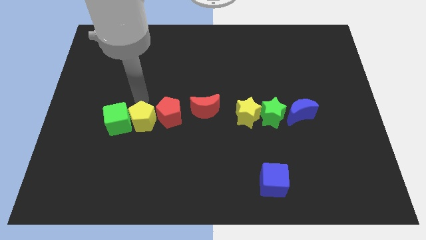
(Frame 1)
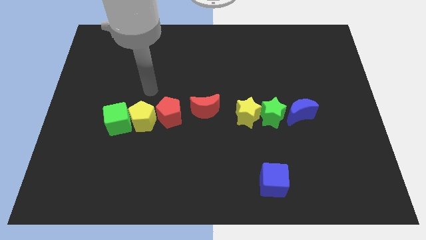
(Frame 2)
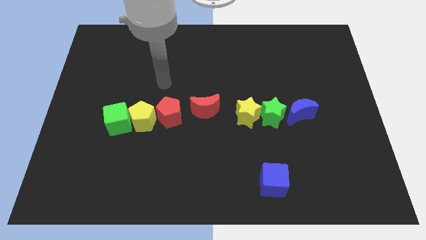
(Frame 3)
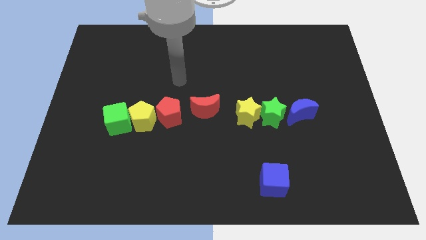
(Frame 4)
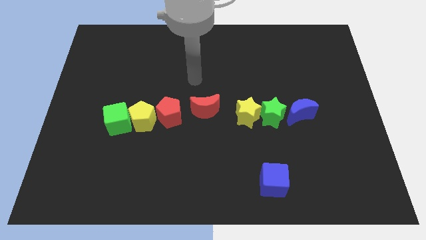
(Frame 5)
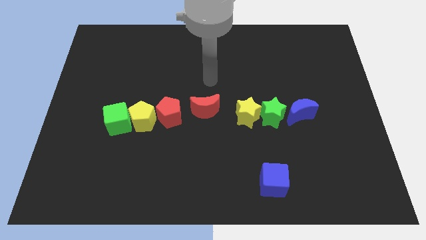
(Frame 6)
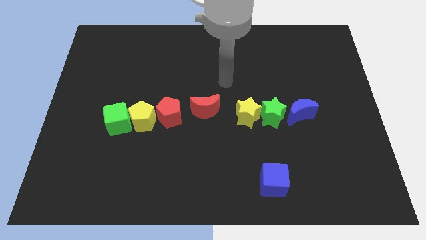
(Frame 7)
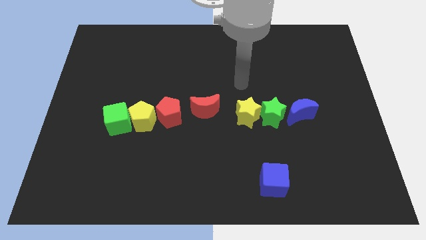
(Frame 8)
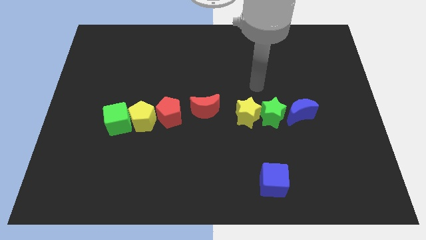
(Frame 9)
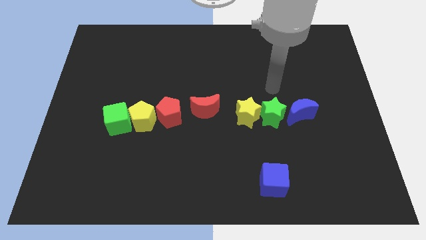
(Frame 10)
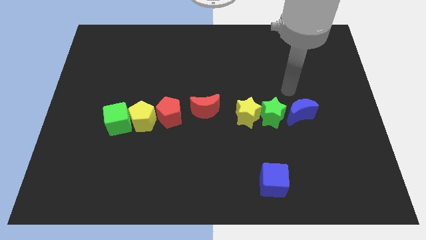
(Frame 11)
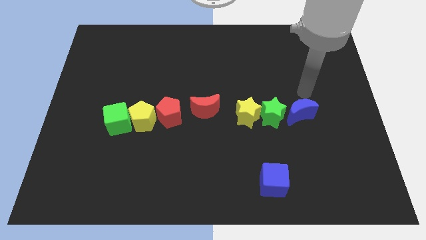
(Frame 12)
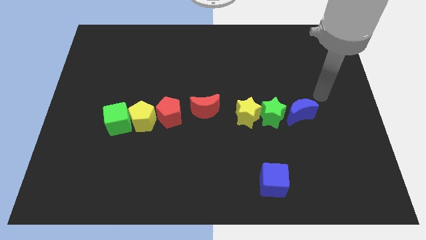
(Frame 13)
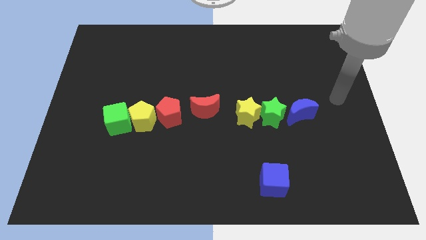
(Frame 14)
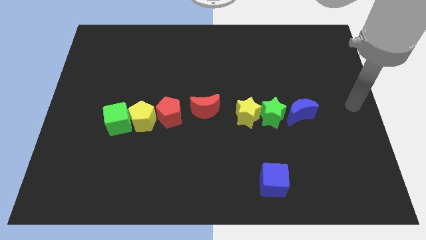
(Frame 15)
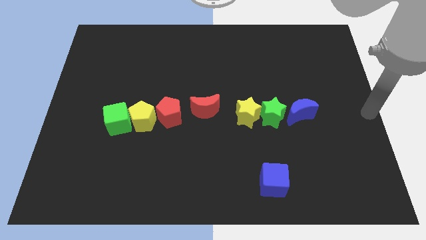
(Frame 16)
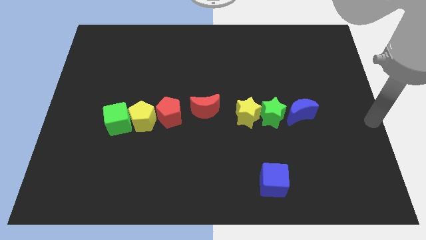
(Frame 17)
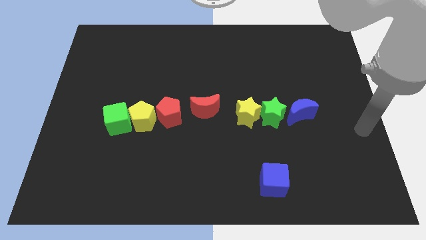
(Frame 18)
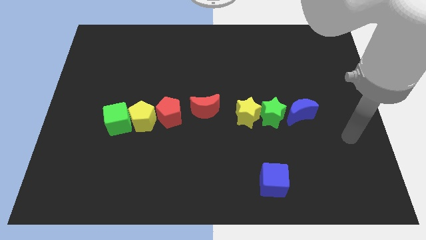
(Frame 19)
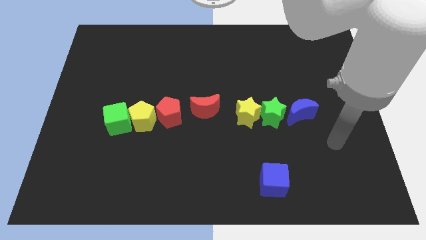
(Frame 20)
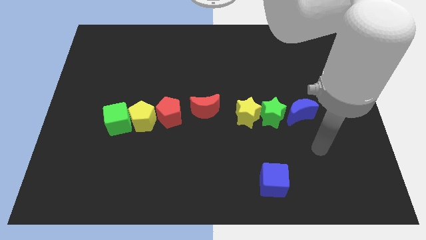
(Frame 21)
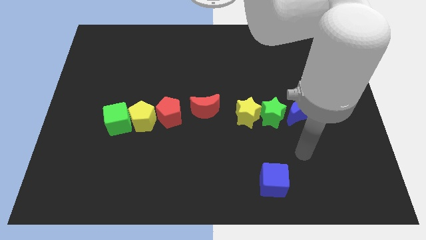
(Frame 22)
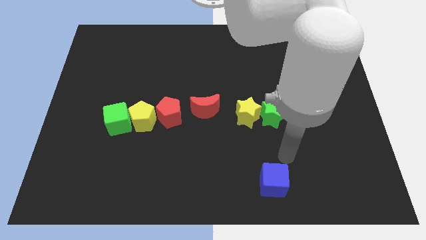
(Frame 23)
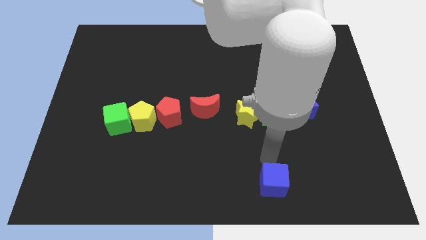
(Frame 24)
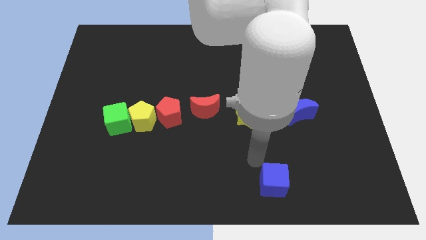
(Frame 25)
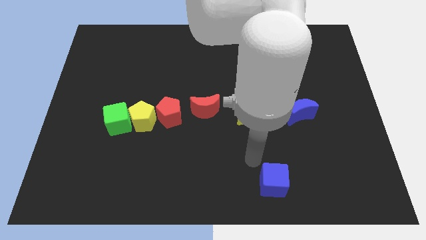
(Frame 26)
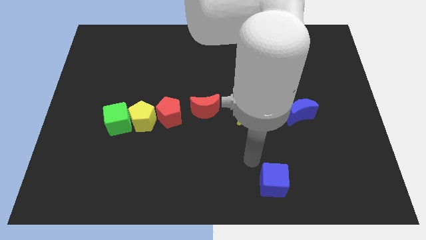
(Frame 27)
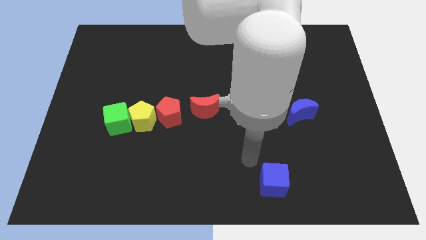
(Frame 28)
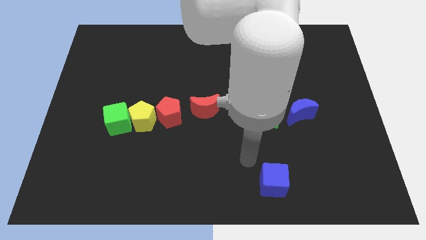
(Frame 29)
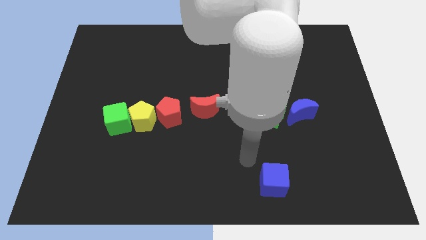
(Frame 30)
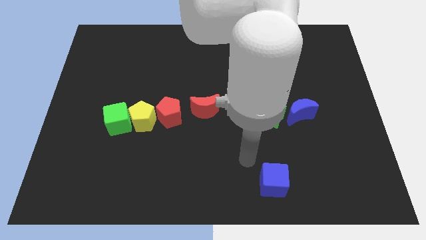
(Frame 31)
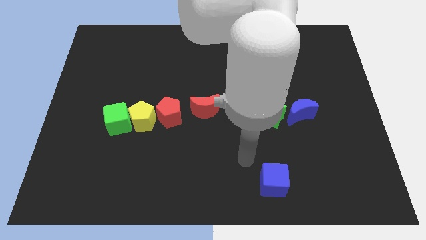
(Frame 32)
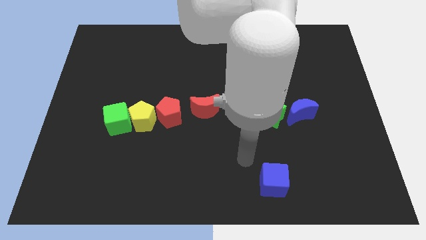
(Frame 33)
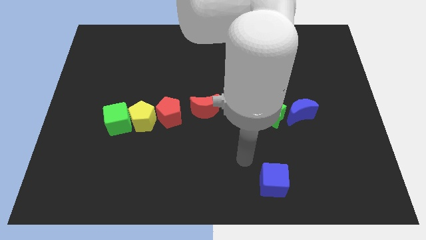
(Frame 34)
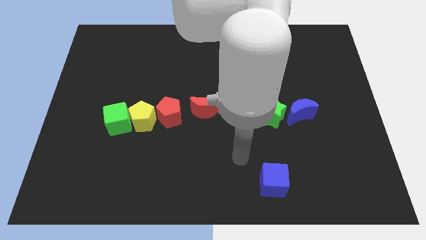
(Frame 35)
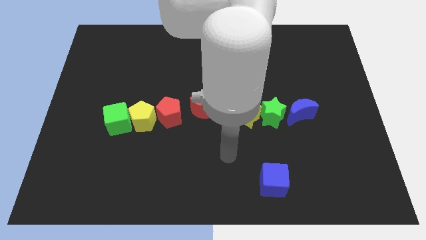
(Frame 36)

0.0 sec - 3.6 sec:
move your arm away from the yellow pentagon

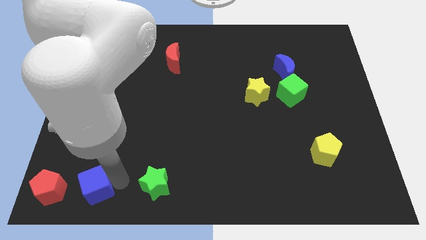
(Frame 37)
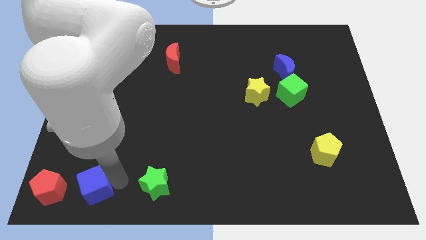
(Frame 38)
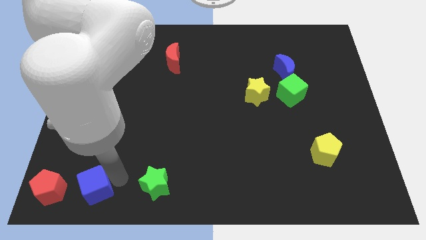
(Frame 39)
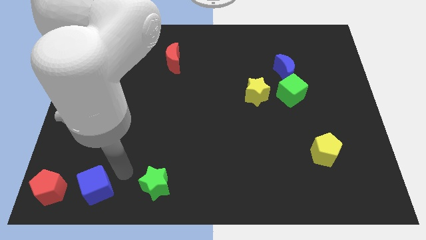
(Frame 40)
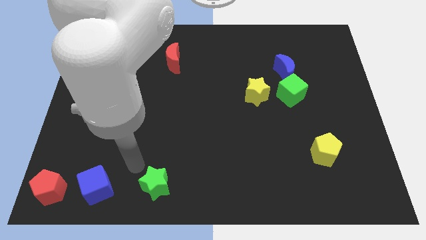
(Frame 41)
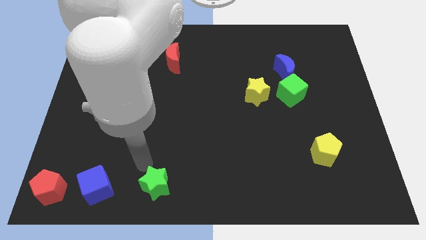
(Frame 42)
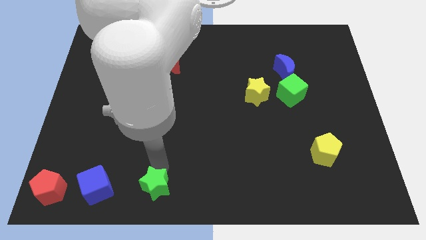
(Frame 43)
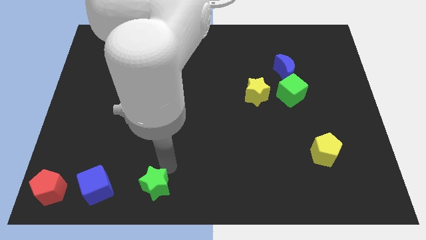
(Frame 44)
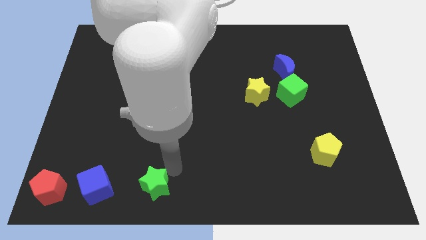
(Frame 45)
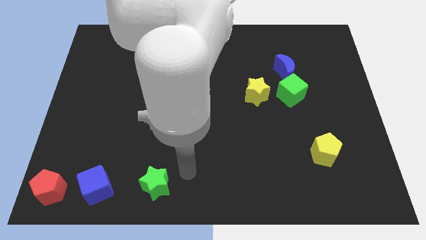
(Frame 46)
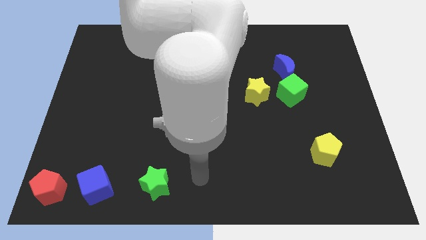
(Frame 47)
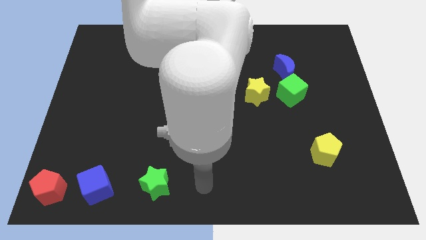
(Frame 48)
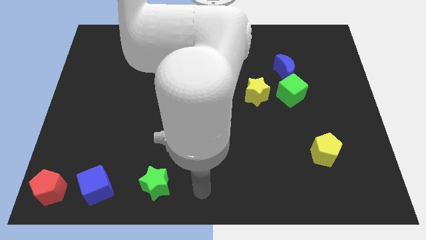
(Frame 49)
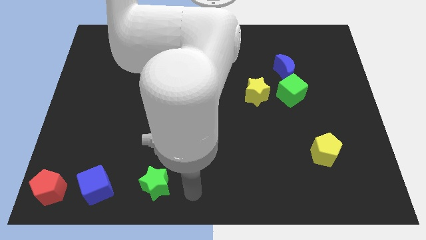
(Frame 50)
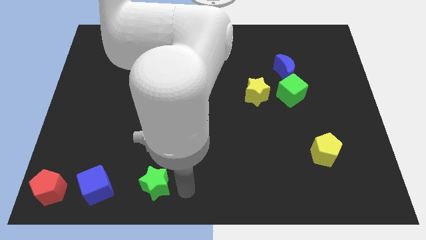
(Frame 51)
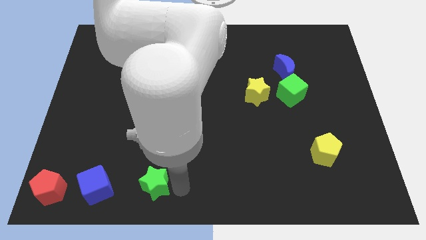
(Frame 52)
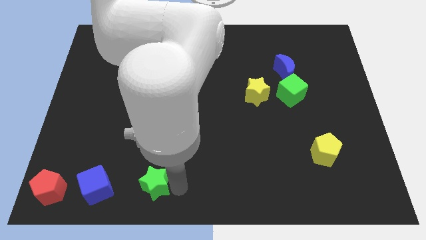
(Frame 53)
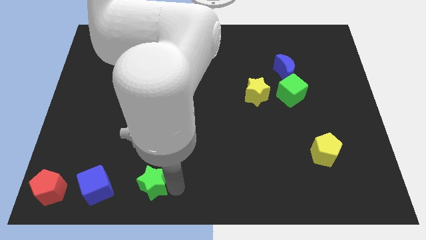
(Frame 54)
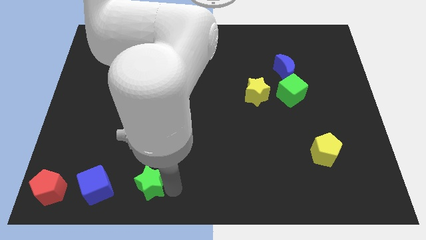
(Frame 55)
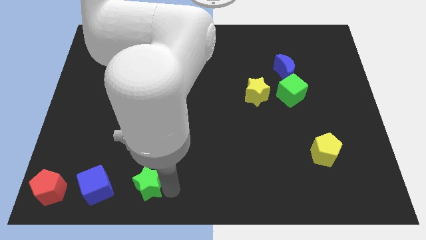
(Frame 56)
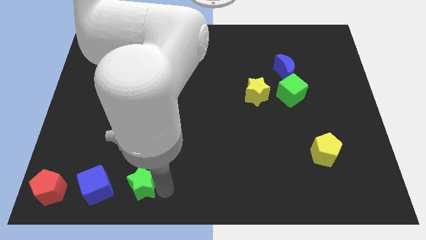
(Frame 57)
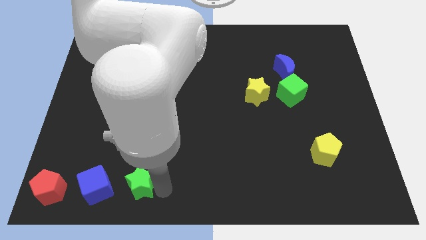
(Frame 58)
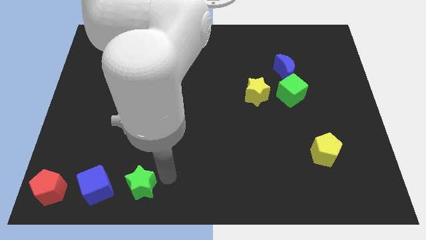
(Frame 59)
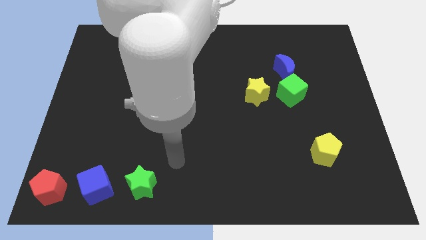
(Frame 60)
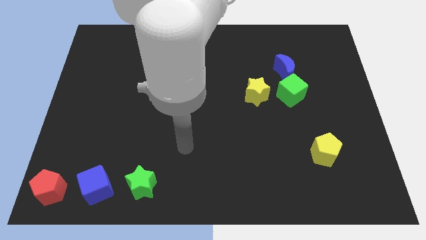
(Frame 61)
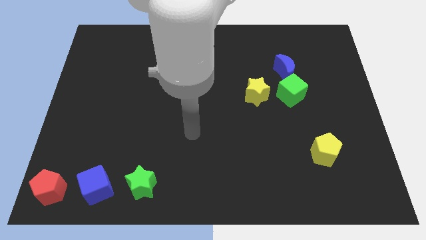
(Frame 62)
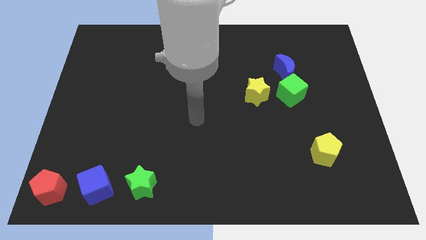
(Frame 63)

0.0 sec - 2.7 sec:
place green star to the right of blue cube

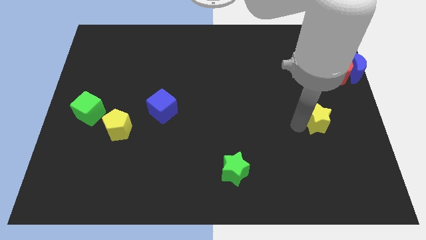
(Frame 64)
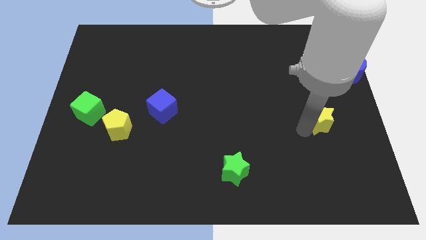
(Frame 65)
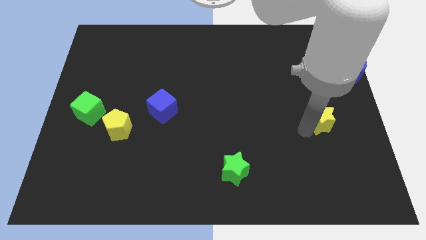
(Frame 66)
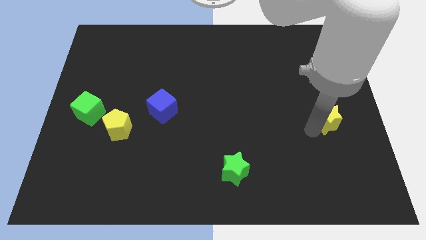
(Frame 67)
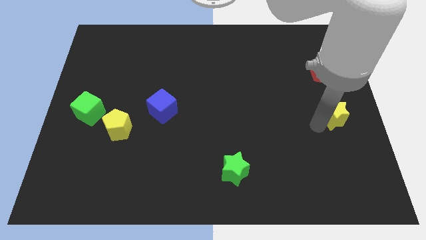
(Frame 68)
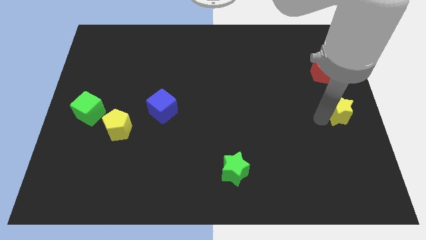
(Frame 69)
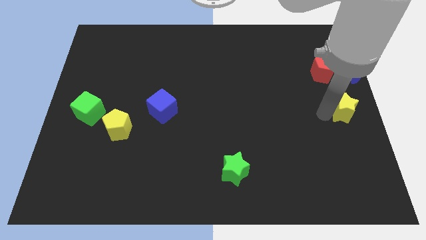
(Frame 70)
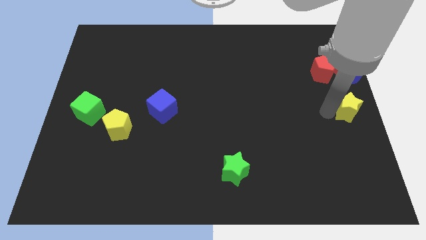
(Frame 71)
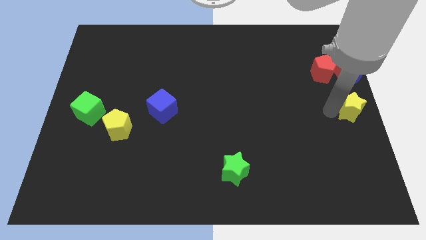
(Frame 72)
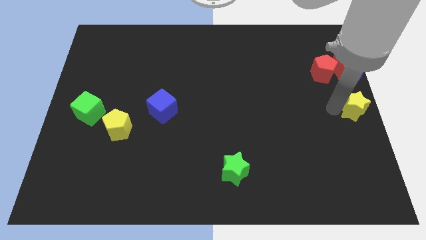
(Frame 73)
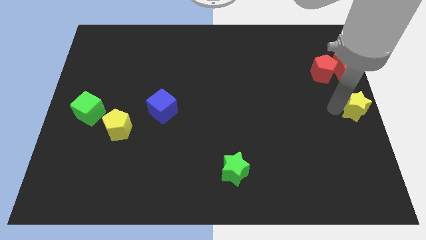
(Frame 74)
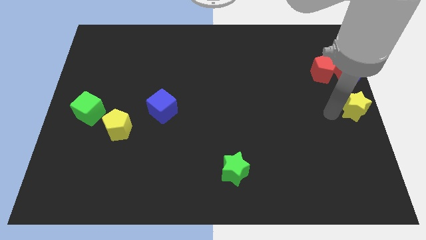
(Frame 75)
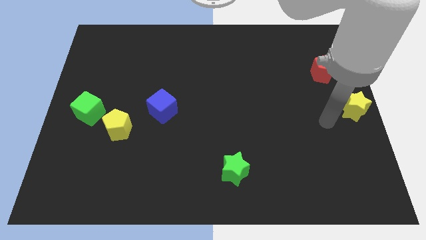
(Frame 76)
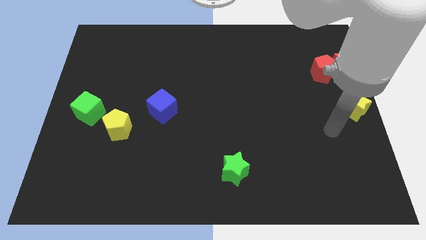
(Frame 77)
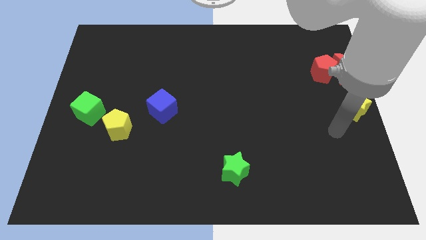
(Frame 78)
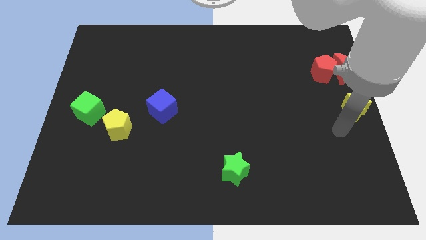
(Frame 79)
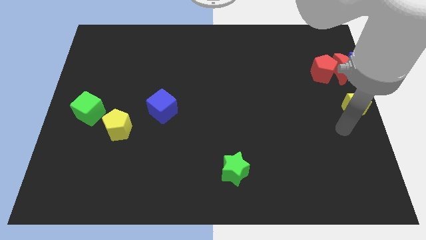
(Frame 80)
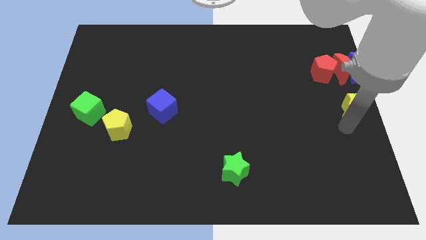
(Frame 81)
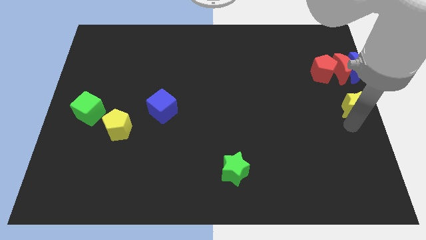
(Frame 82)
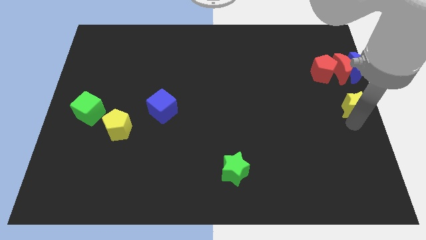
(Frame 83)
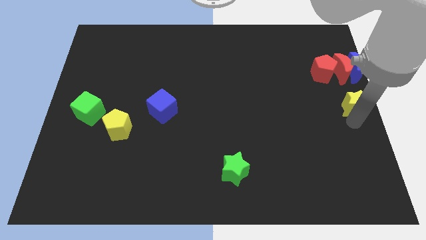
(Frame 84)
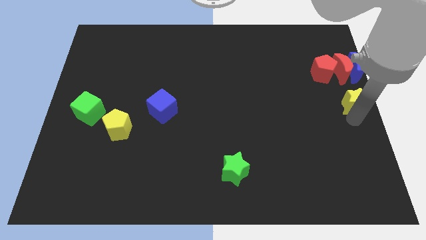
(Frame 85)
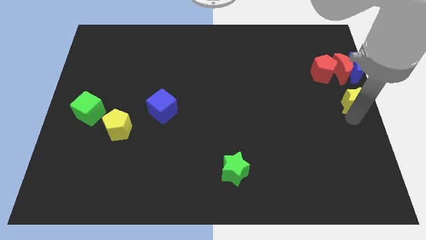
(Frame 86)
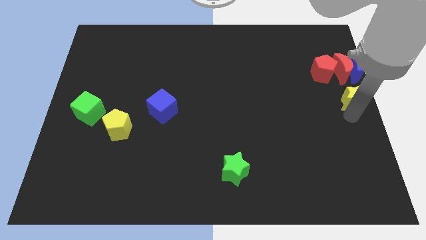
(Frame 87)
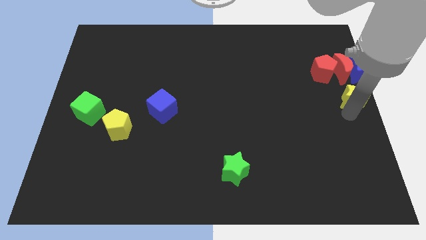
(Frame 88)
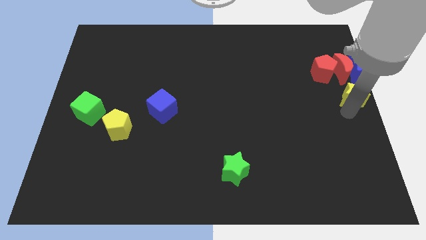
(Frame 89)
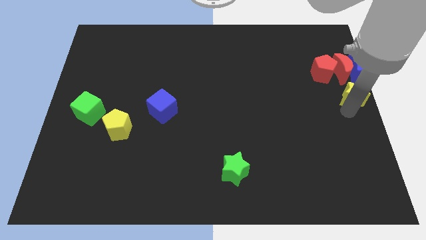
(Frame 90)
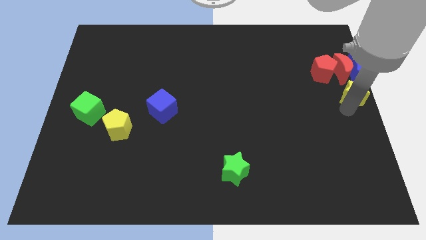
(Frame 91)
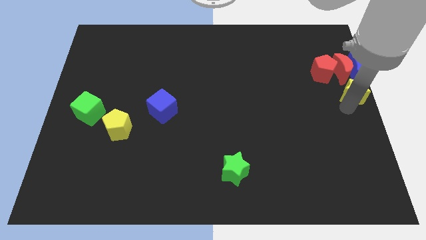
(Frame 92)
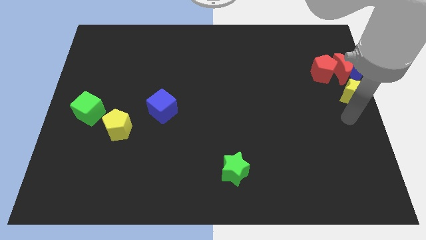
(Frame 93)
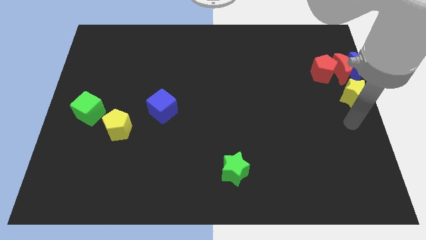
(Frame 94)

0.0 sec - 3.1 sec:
place the yellow star at the bottom of the red crescent and blue crescent
